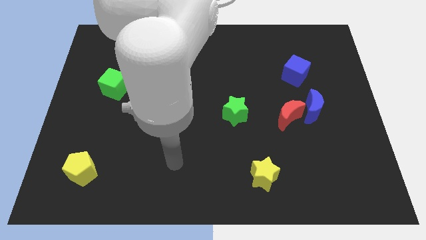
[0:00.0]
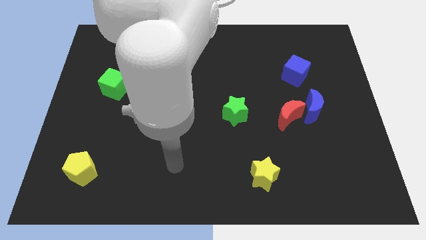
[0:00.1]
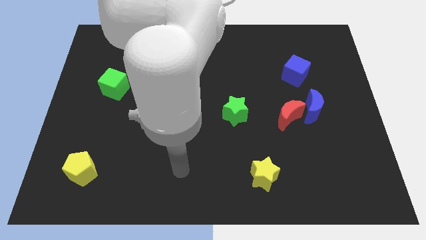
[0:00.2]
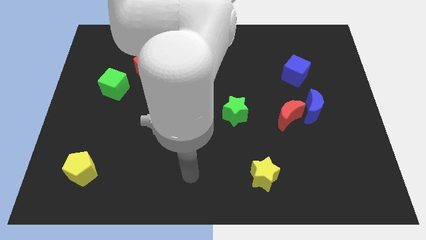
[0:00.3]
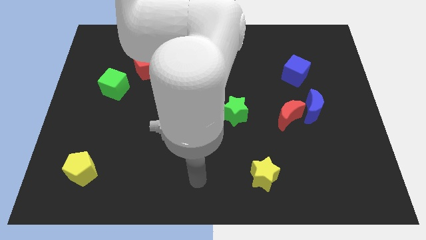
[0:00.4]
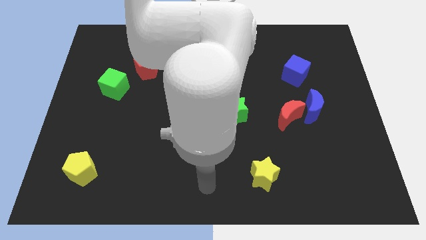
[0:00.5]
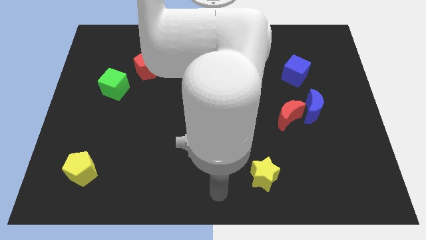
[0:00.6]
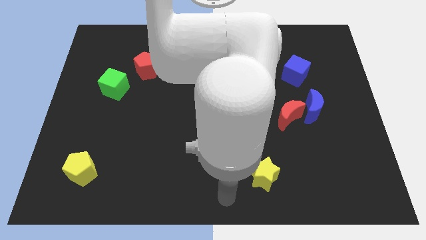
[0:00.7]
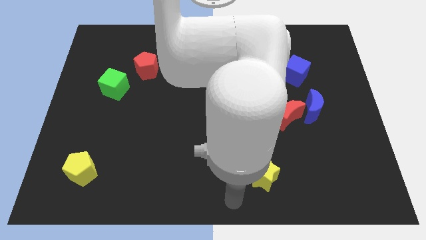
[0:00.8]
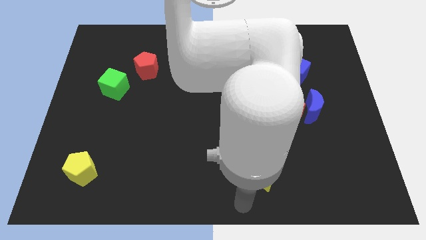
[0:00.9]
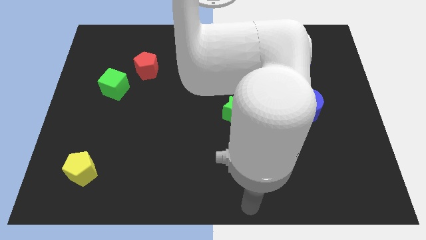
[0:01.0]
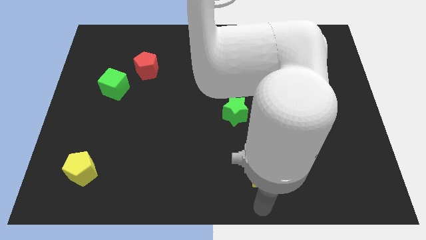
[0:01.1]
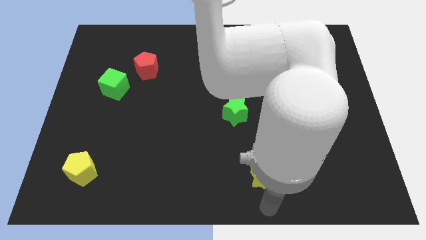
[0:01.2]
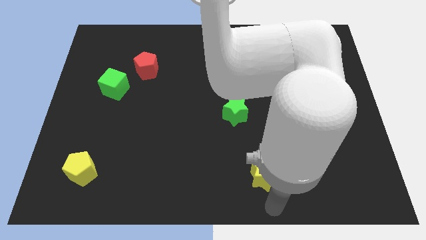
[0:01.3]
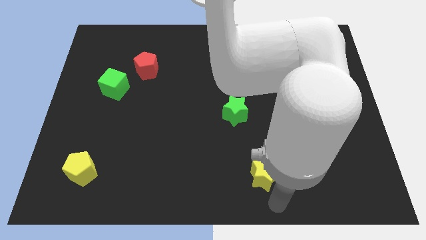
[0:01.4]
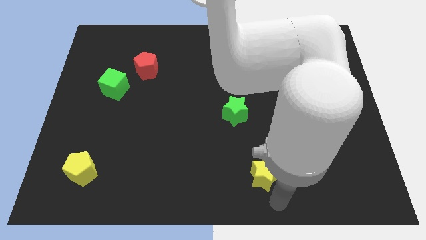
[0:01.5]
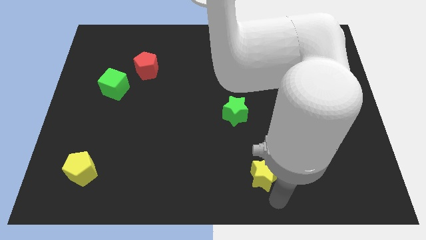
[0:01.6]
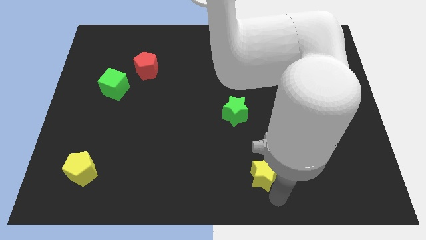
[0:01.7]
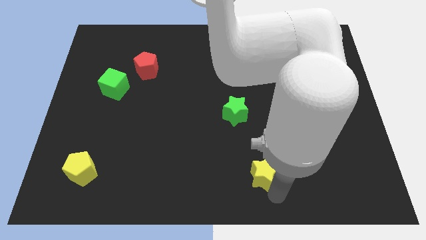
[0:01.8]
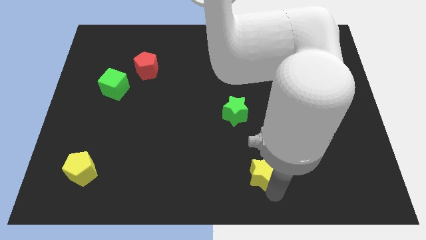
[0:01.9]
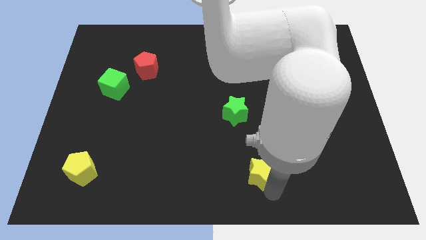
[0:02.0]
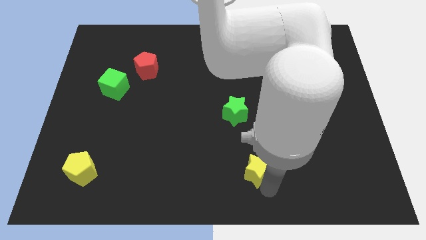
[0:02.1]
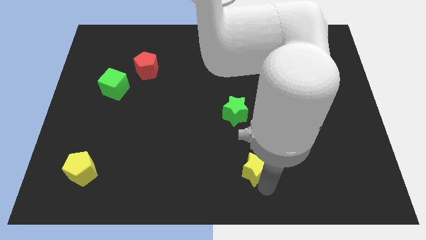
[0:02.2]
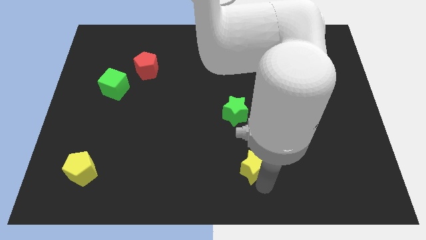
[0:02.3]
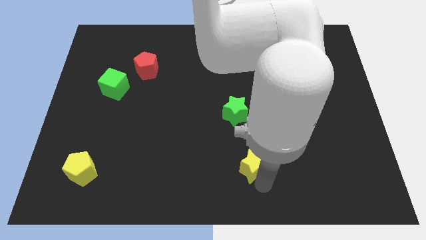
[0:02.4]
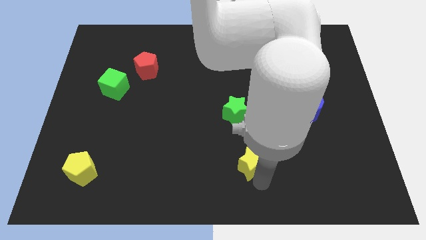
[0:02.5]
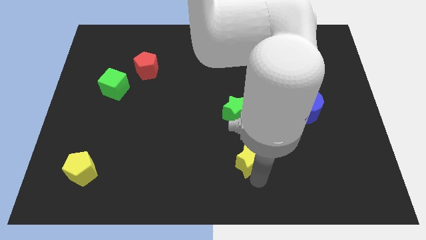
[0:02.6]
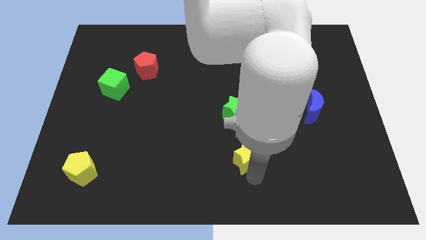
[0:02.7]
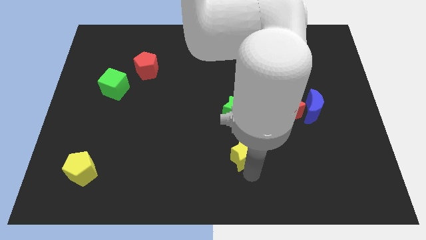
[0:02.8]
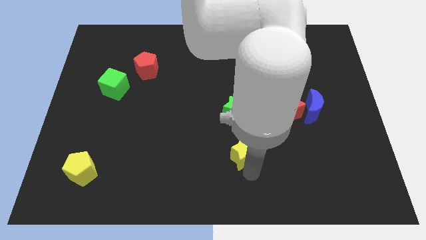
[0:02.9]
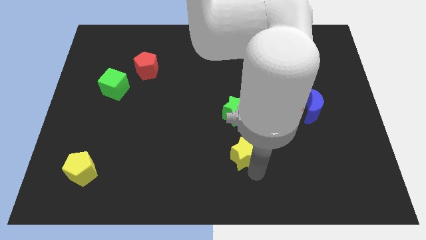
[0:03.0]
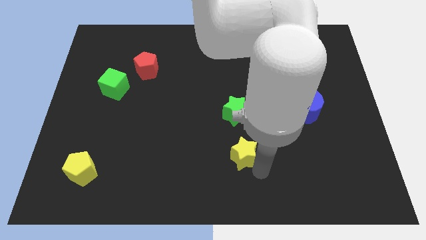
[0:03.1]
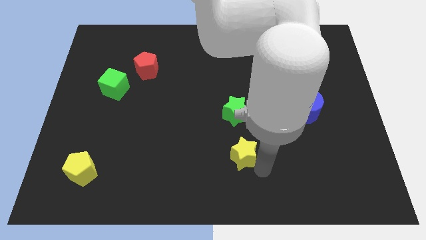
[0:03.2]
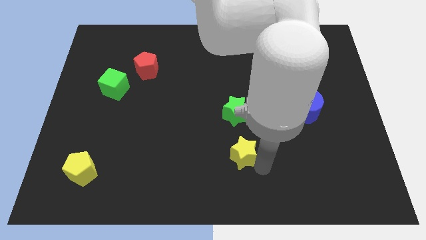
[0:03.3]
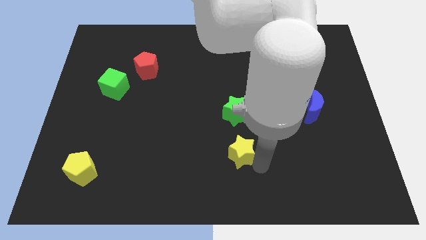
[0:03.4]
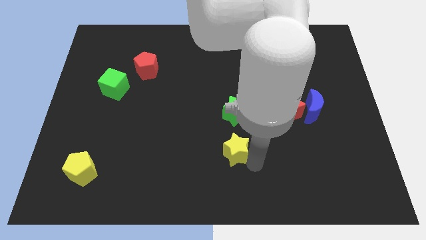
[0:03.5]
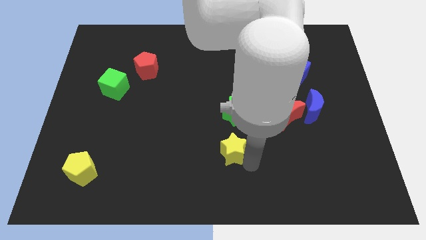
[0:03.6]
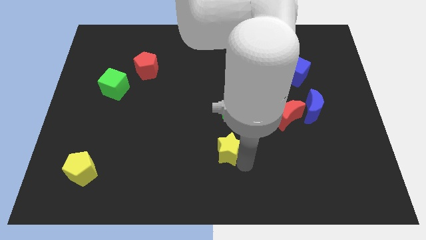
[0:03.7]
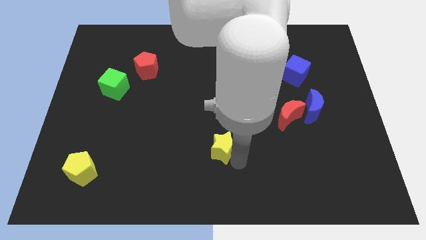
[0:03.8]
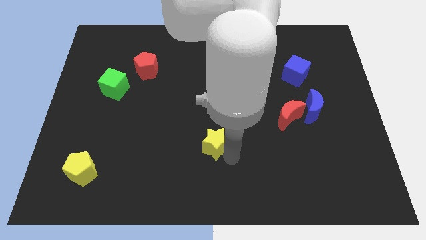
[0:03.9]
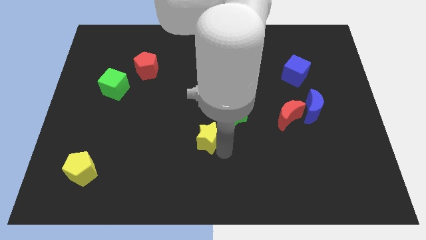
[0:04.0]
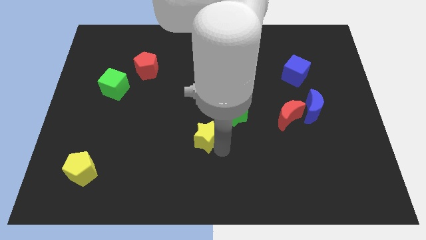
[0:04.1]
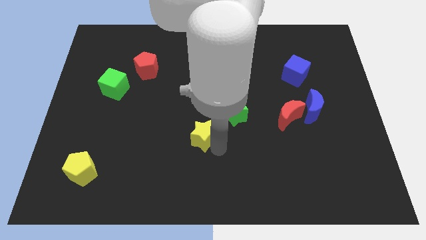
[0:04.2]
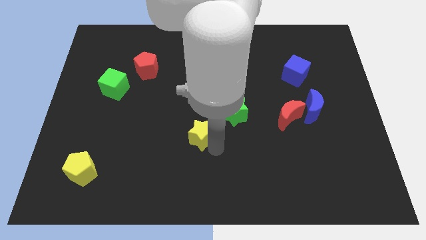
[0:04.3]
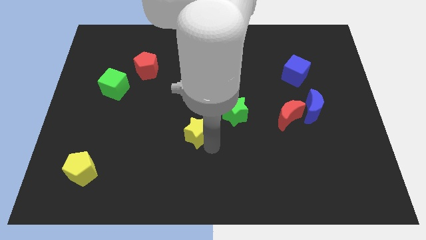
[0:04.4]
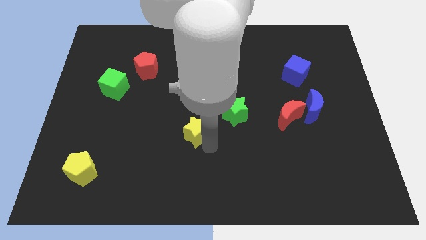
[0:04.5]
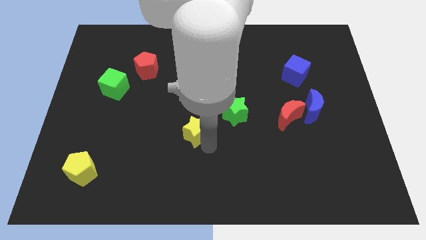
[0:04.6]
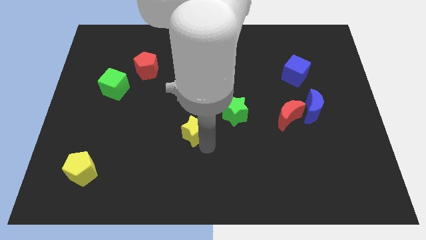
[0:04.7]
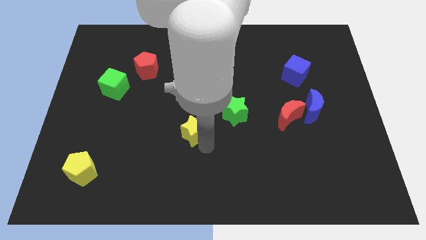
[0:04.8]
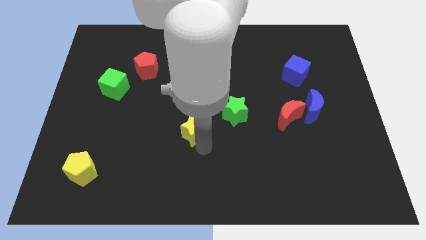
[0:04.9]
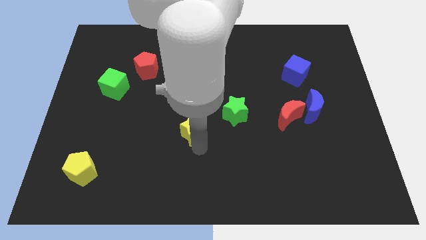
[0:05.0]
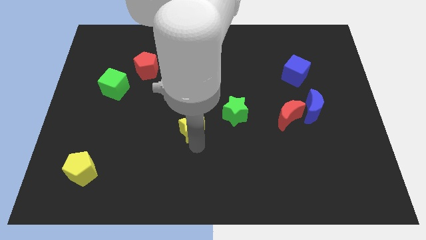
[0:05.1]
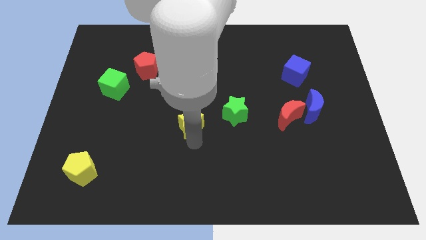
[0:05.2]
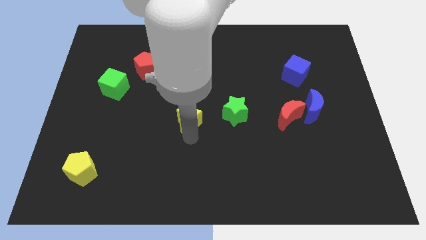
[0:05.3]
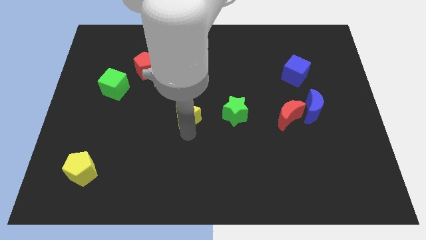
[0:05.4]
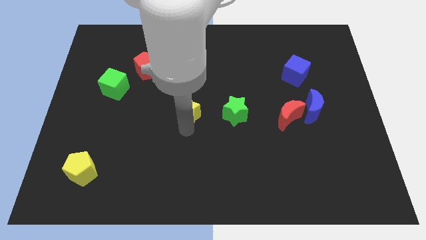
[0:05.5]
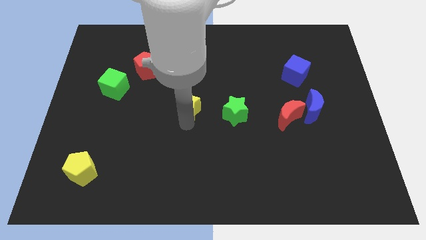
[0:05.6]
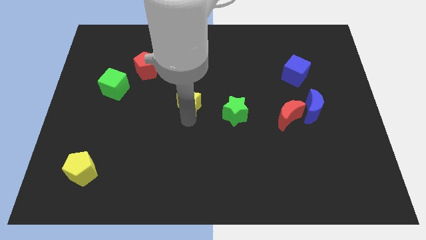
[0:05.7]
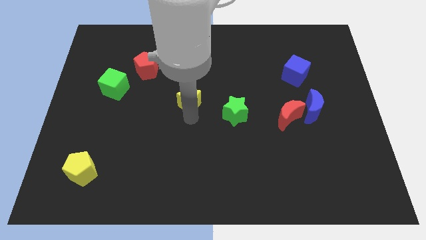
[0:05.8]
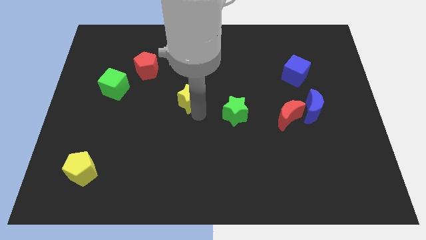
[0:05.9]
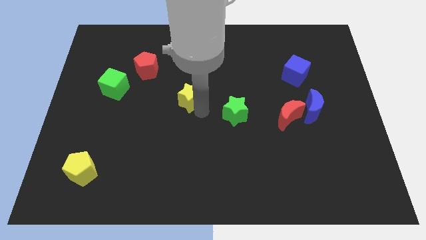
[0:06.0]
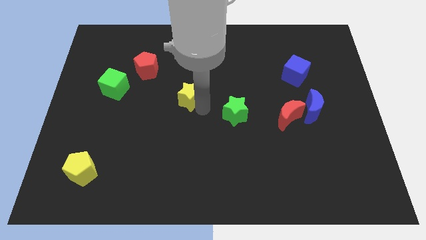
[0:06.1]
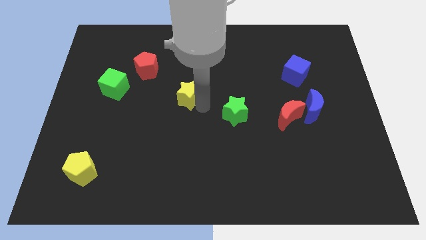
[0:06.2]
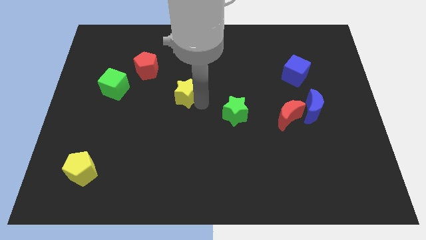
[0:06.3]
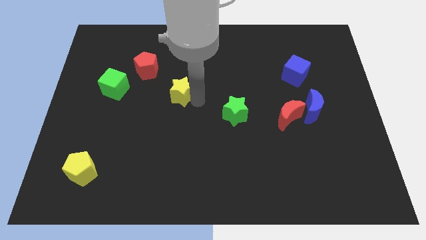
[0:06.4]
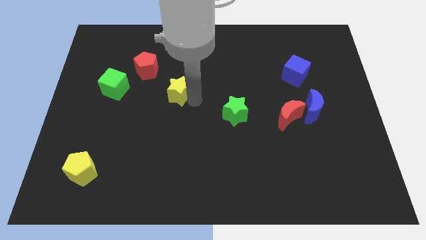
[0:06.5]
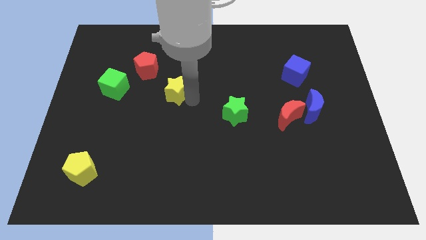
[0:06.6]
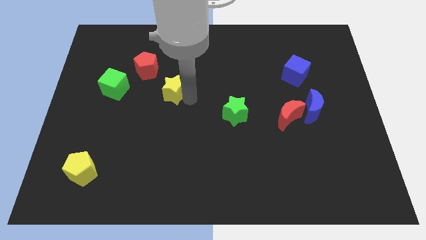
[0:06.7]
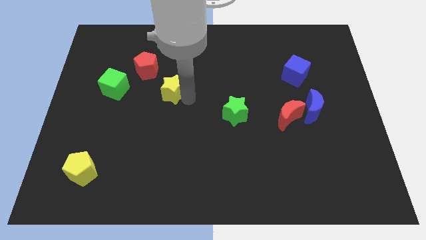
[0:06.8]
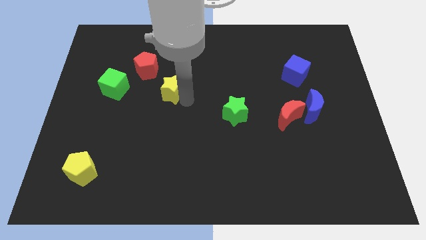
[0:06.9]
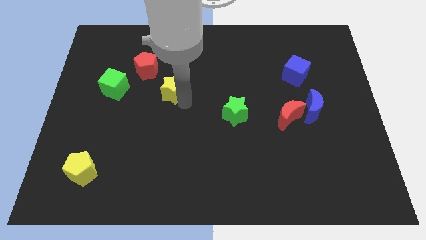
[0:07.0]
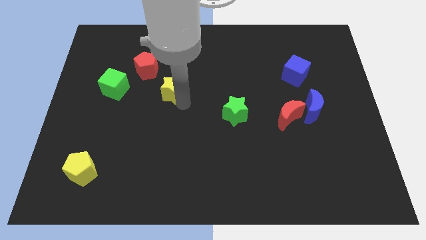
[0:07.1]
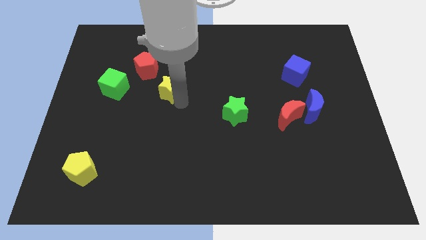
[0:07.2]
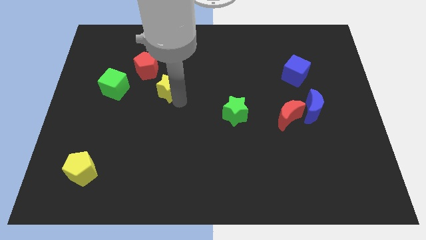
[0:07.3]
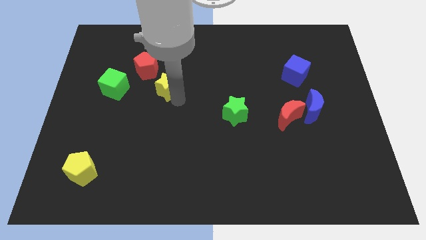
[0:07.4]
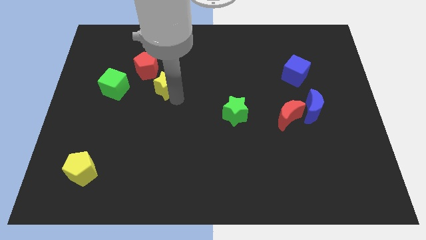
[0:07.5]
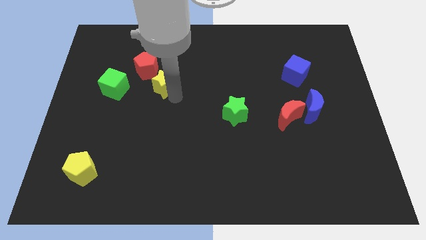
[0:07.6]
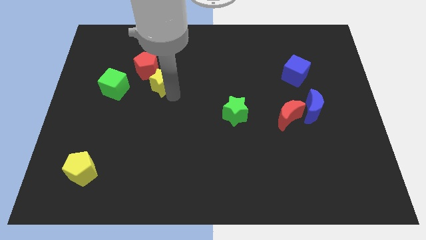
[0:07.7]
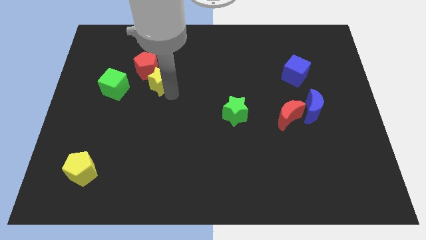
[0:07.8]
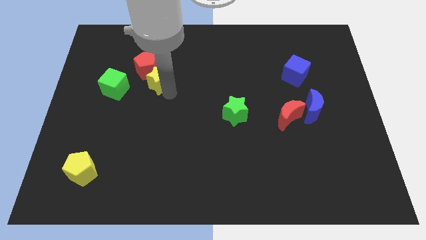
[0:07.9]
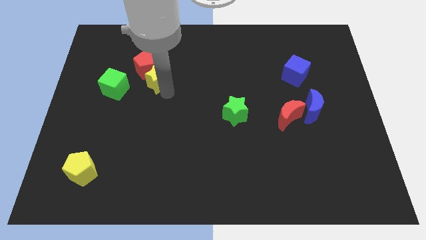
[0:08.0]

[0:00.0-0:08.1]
push the yellow star to the red pentagon

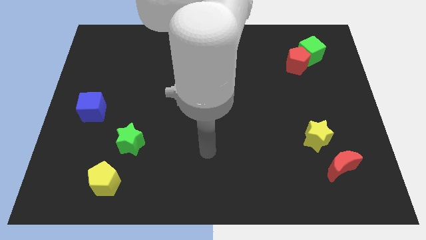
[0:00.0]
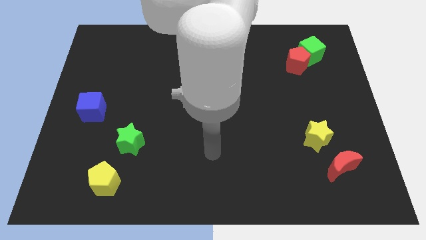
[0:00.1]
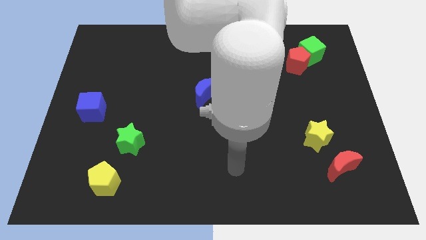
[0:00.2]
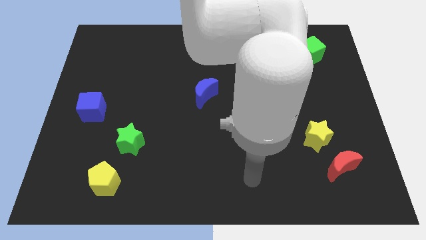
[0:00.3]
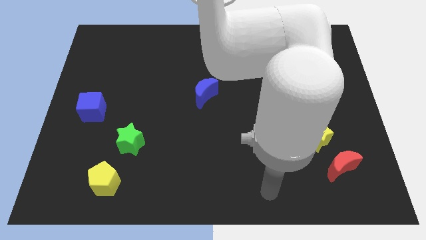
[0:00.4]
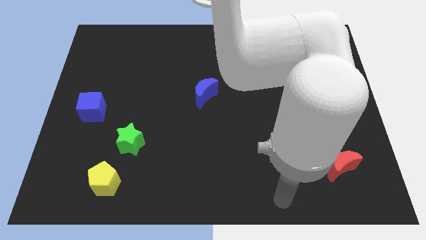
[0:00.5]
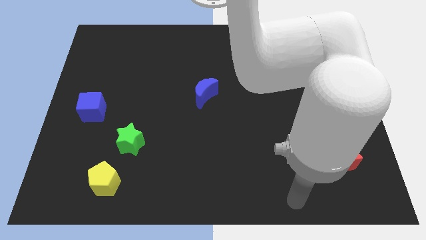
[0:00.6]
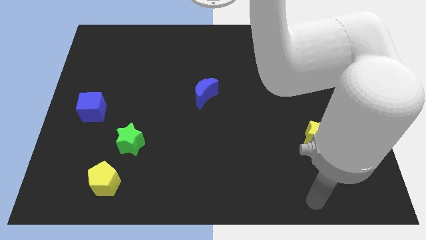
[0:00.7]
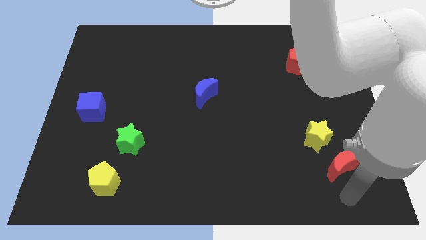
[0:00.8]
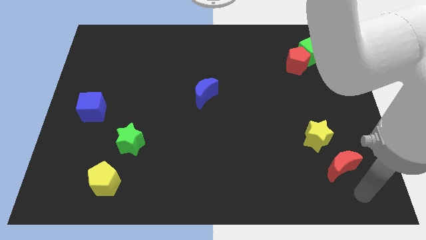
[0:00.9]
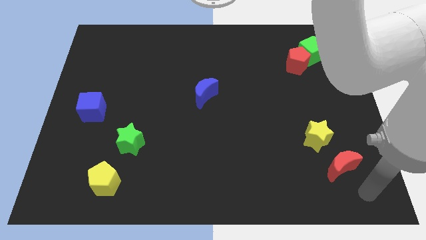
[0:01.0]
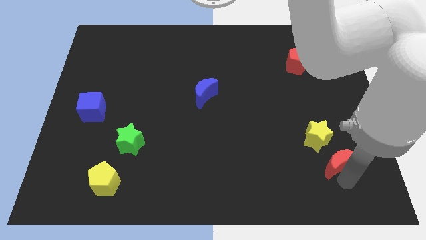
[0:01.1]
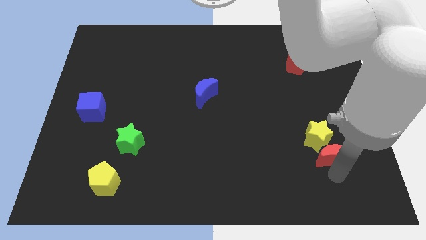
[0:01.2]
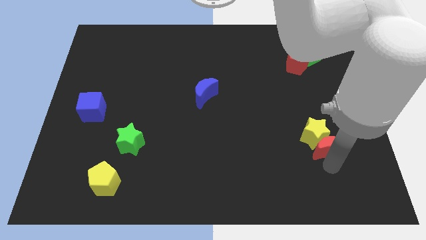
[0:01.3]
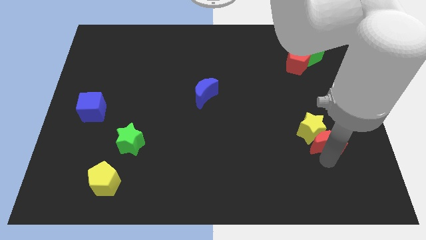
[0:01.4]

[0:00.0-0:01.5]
move the red moon next to the yellow star
